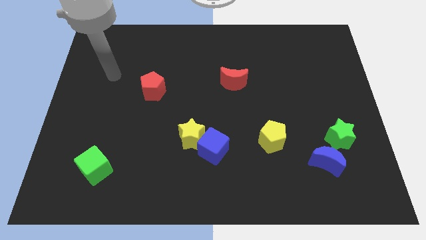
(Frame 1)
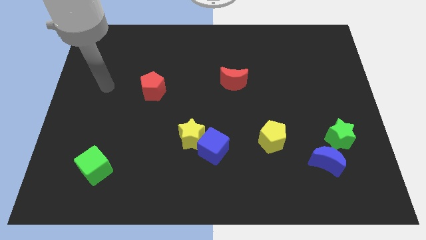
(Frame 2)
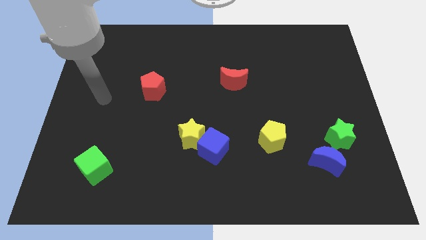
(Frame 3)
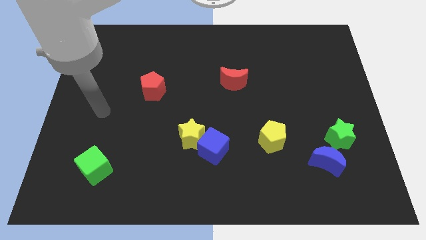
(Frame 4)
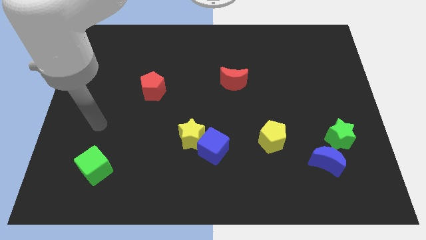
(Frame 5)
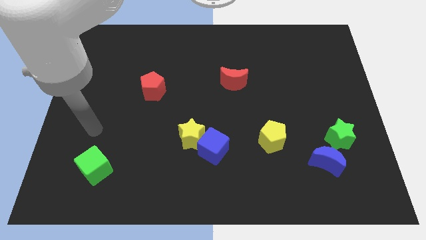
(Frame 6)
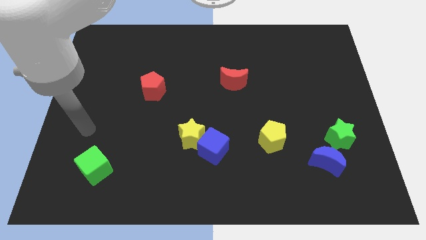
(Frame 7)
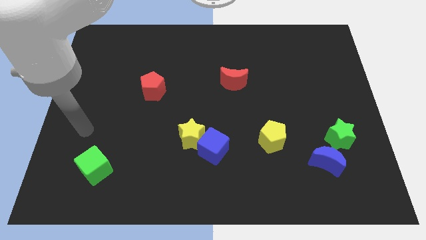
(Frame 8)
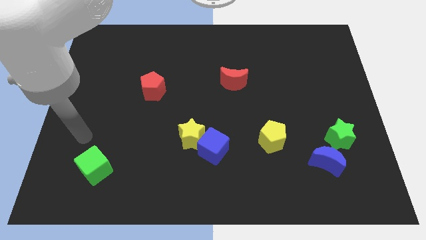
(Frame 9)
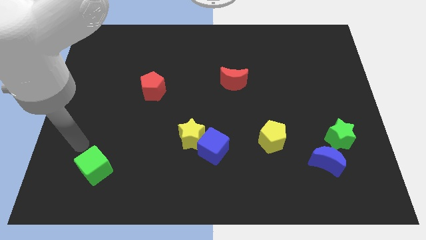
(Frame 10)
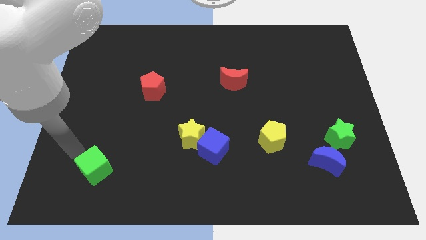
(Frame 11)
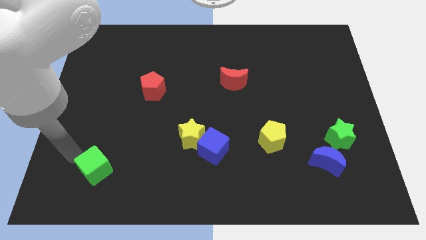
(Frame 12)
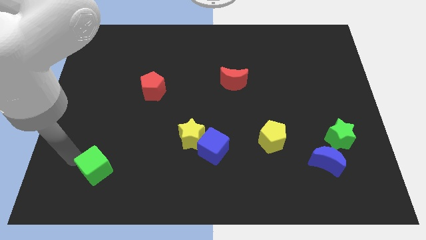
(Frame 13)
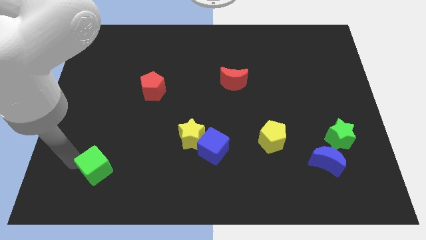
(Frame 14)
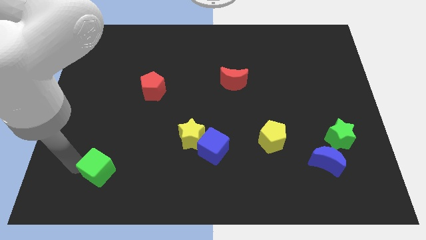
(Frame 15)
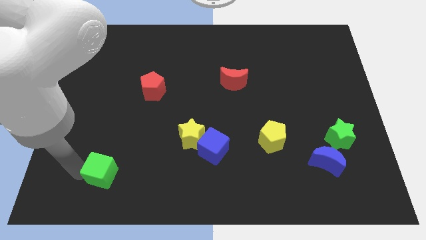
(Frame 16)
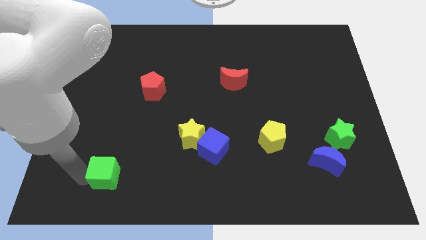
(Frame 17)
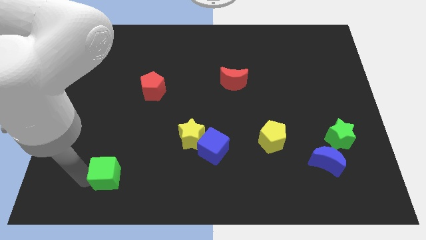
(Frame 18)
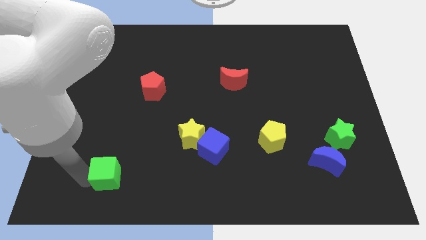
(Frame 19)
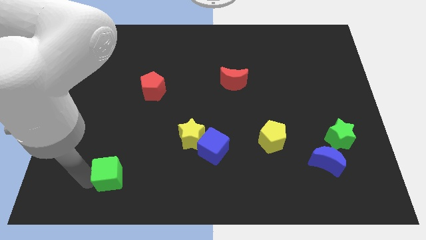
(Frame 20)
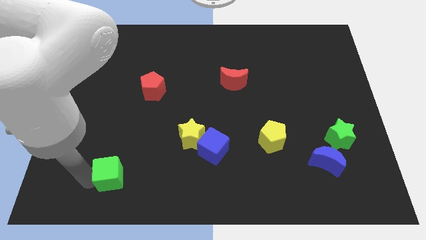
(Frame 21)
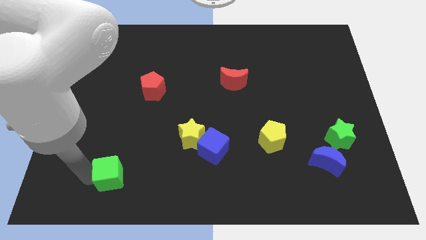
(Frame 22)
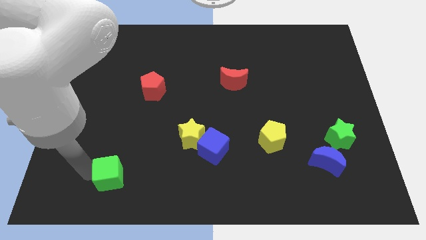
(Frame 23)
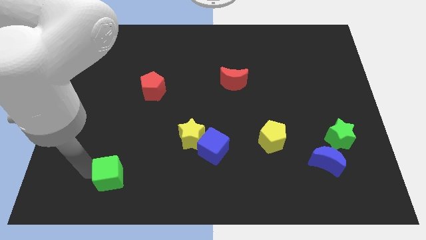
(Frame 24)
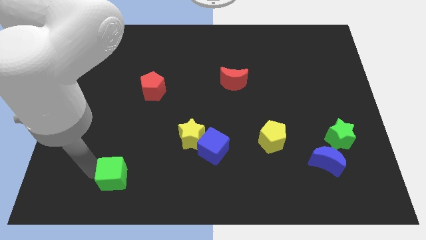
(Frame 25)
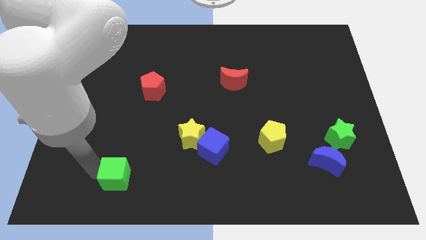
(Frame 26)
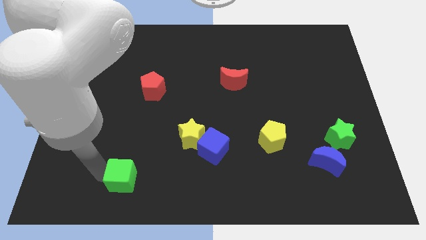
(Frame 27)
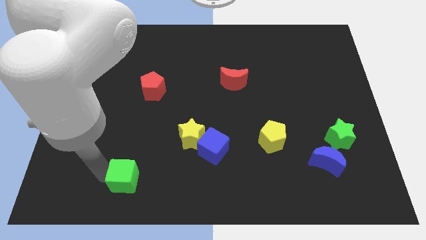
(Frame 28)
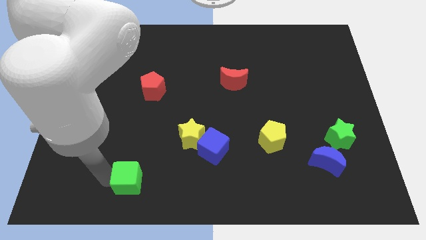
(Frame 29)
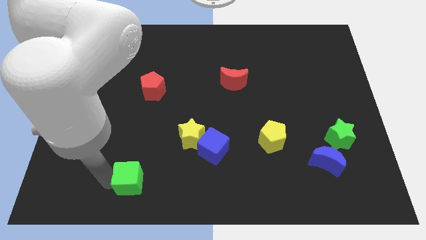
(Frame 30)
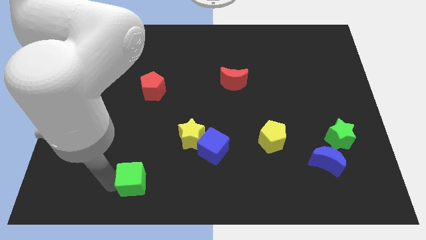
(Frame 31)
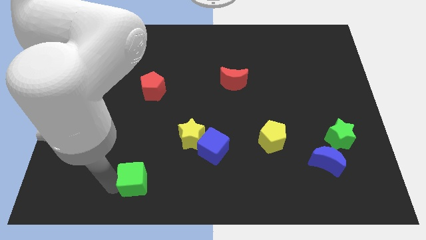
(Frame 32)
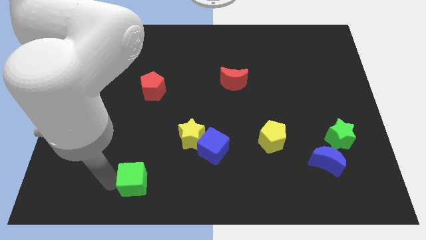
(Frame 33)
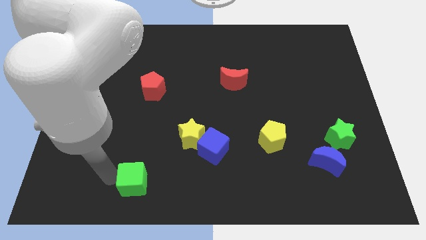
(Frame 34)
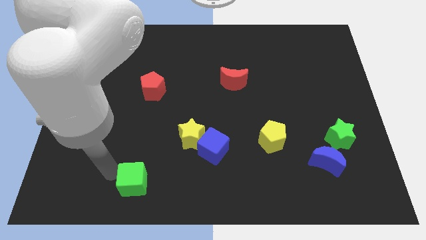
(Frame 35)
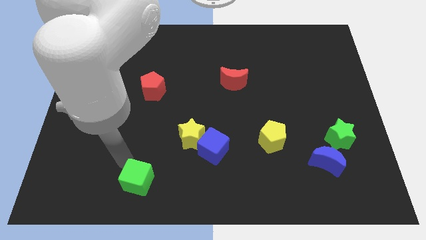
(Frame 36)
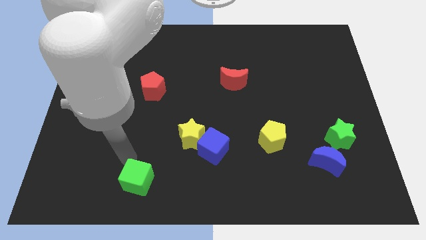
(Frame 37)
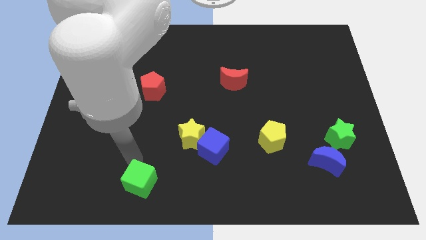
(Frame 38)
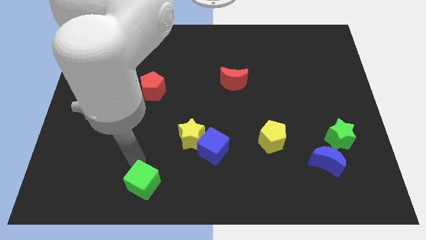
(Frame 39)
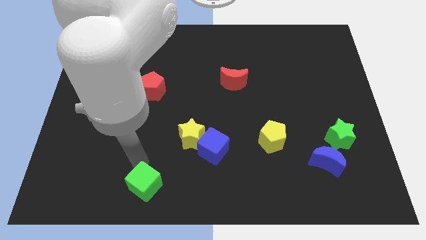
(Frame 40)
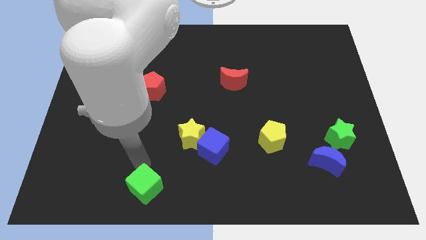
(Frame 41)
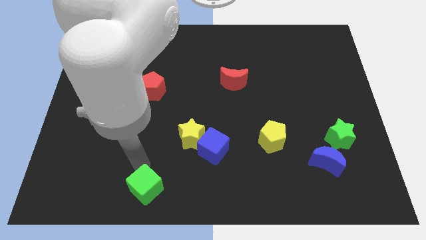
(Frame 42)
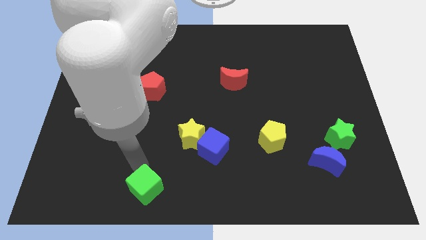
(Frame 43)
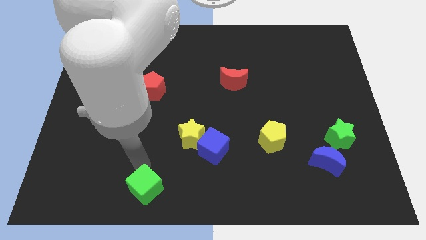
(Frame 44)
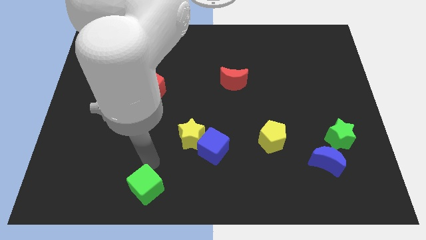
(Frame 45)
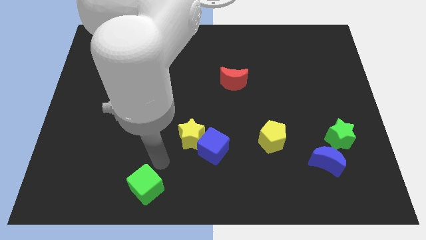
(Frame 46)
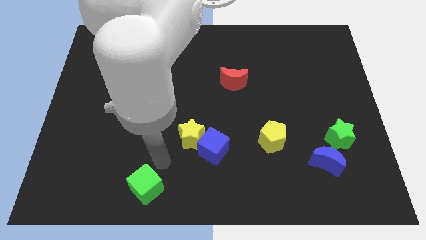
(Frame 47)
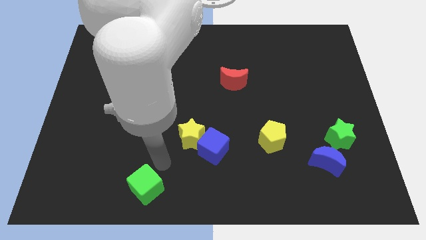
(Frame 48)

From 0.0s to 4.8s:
place the green cube below the yellow star

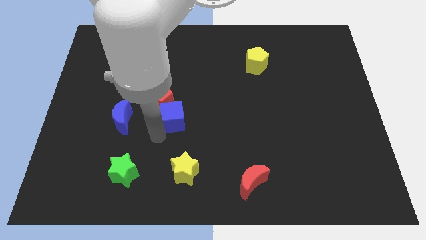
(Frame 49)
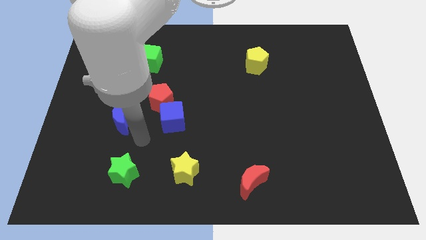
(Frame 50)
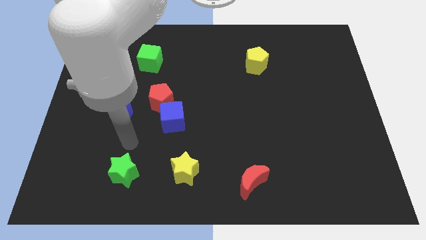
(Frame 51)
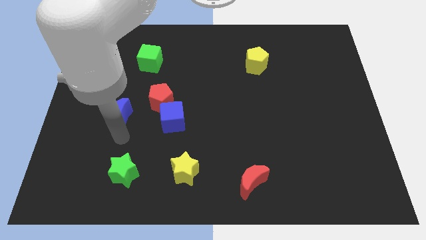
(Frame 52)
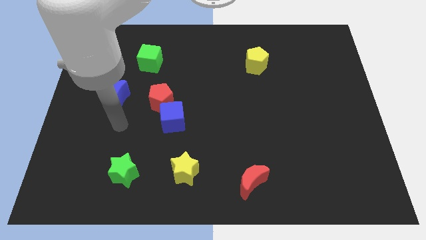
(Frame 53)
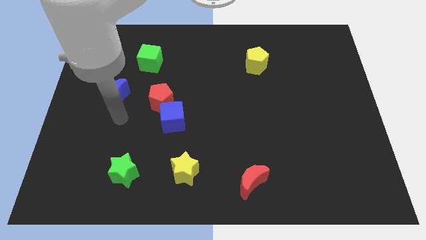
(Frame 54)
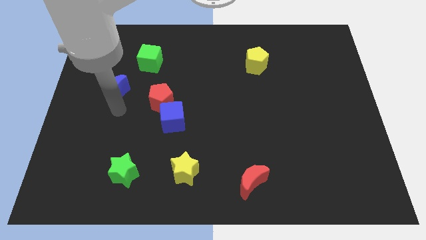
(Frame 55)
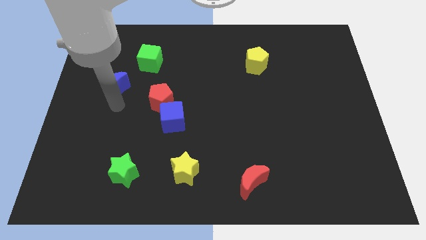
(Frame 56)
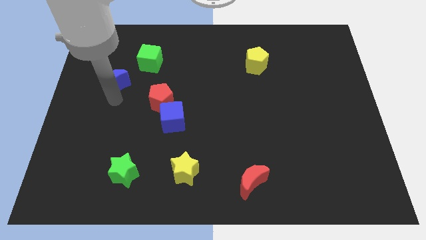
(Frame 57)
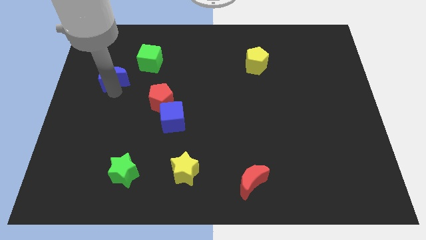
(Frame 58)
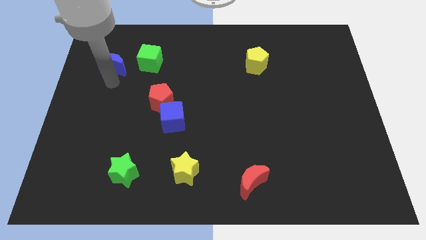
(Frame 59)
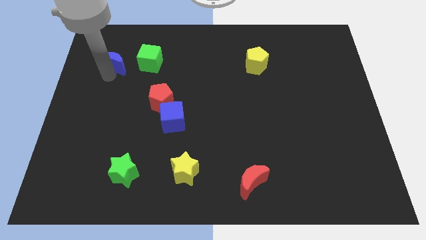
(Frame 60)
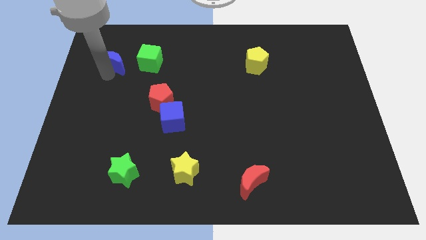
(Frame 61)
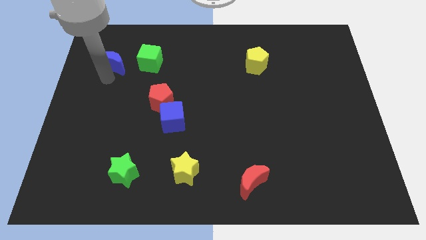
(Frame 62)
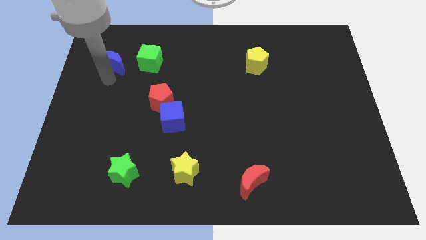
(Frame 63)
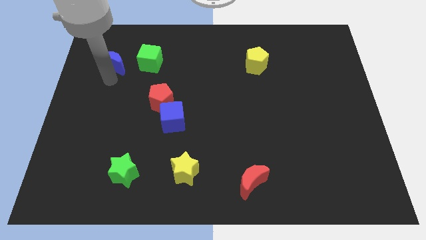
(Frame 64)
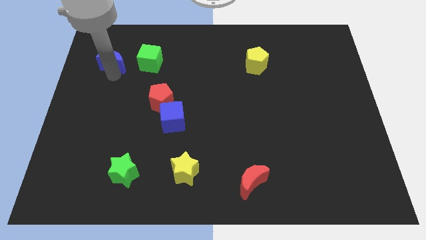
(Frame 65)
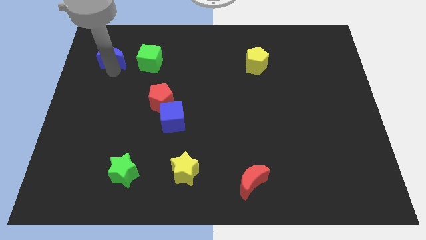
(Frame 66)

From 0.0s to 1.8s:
put the blue moon left to the green cube

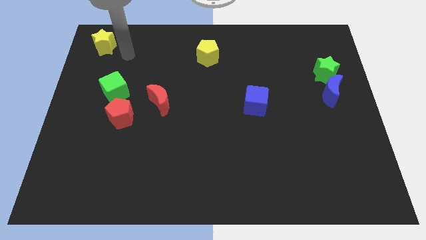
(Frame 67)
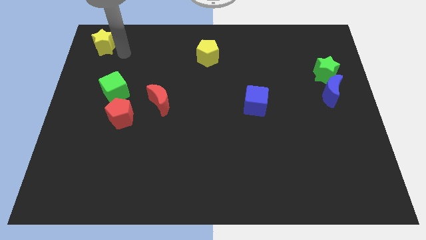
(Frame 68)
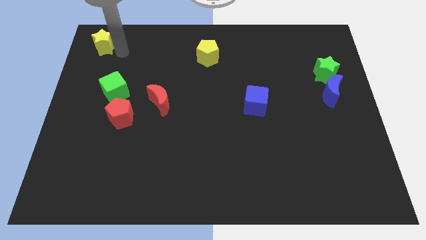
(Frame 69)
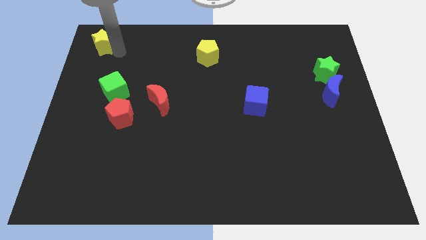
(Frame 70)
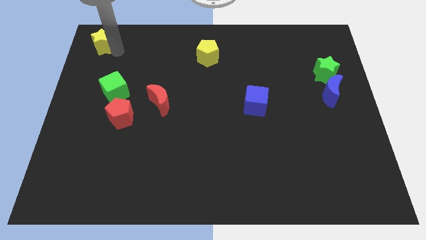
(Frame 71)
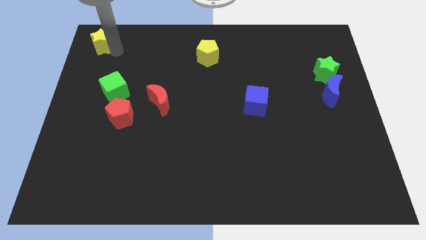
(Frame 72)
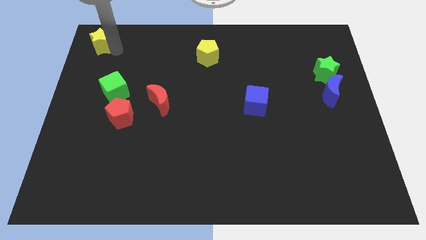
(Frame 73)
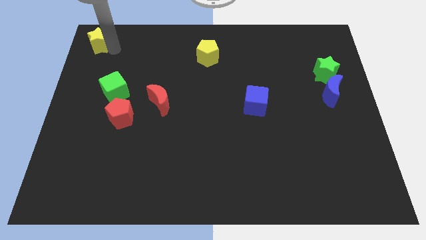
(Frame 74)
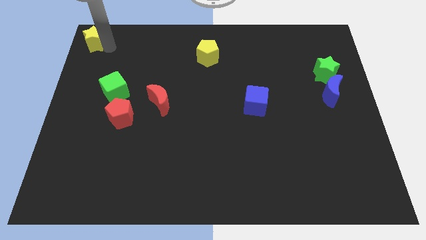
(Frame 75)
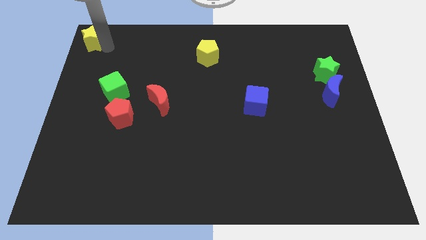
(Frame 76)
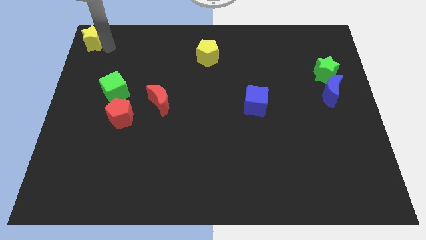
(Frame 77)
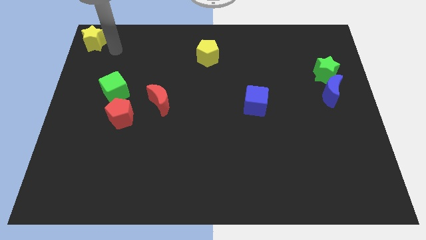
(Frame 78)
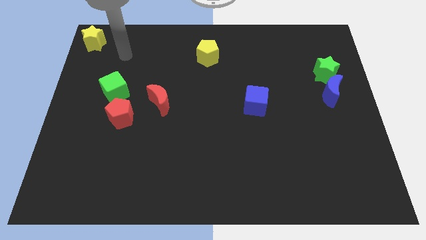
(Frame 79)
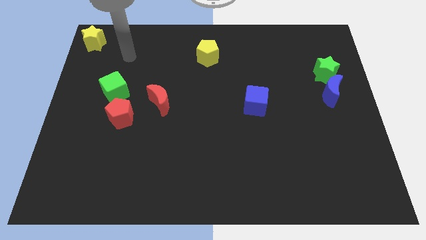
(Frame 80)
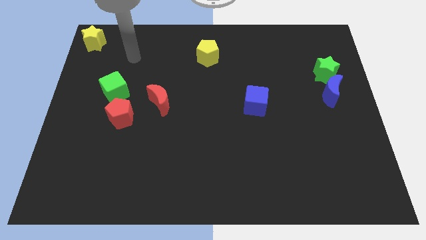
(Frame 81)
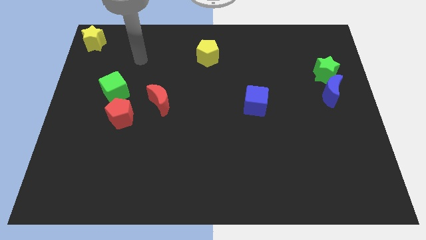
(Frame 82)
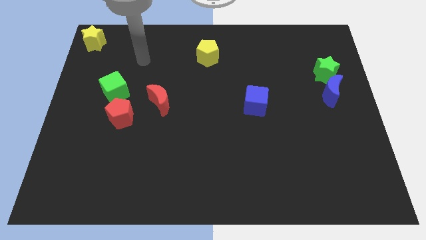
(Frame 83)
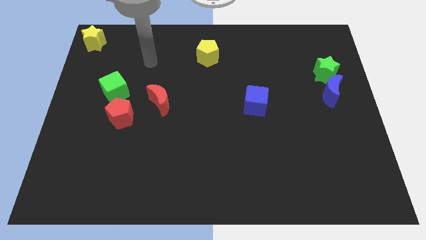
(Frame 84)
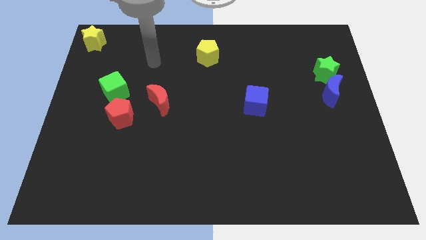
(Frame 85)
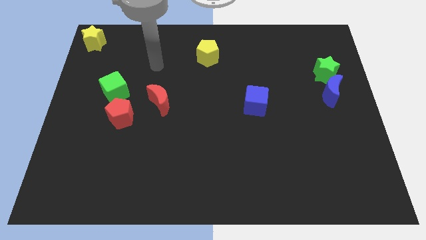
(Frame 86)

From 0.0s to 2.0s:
move the yellow star towards the top left corner of the board

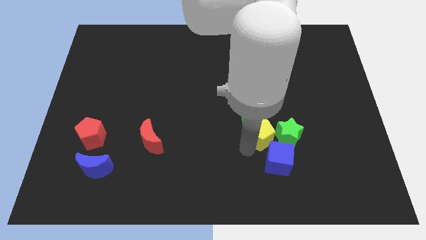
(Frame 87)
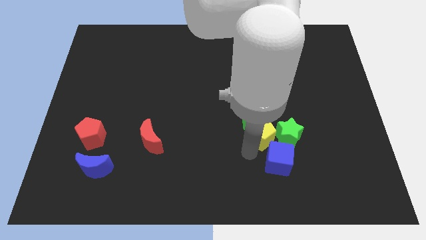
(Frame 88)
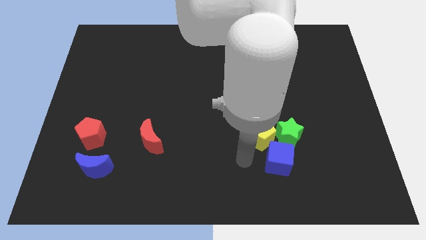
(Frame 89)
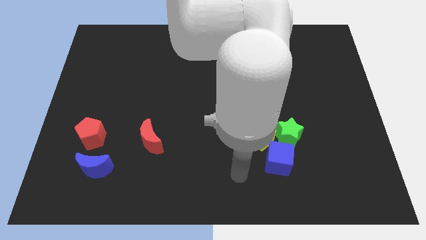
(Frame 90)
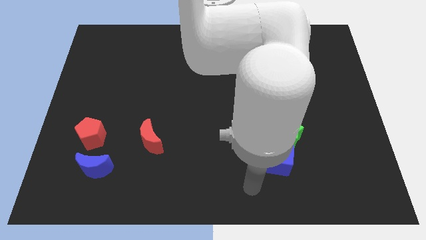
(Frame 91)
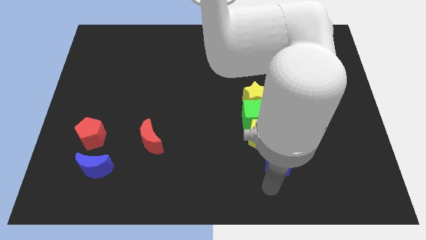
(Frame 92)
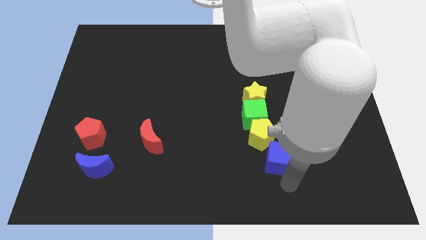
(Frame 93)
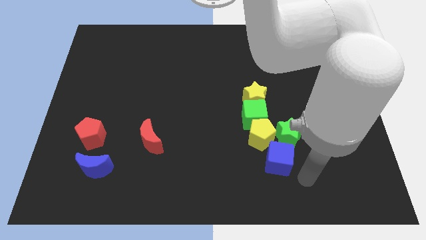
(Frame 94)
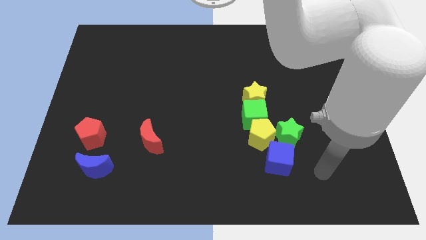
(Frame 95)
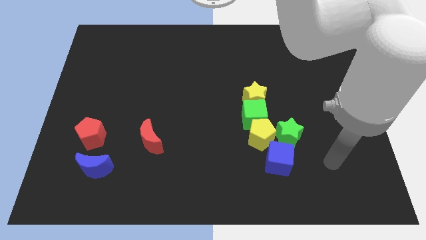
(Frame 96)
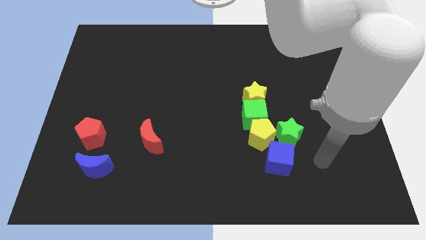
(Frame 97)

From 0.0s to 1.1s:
move your arm away from yellow pentagon
